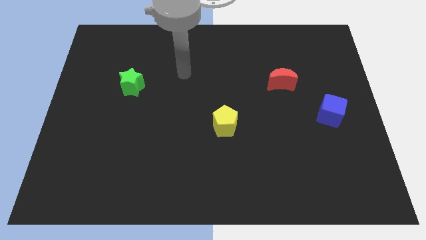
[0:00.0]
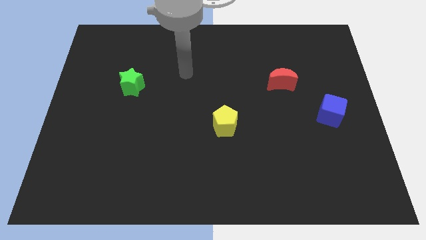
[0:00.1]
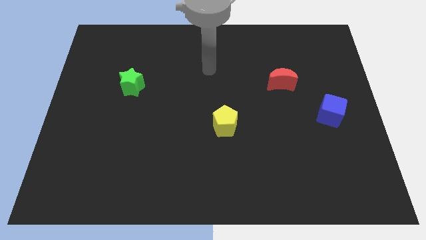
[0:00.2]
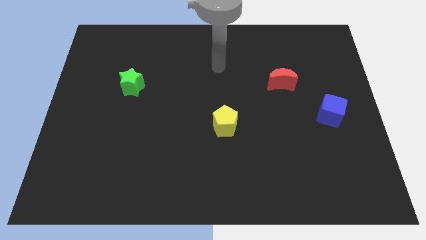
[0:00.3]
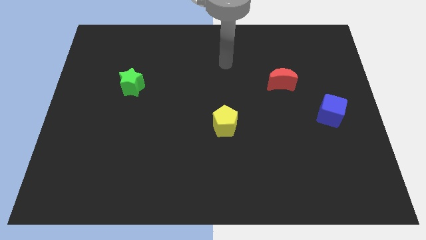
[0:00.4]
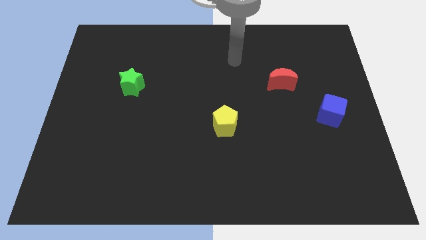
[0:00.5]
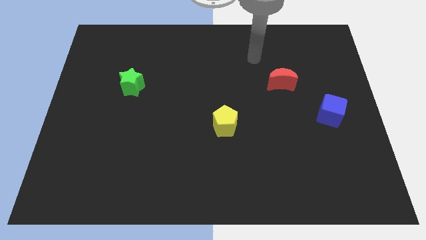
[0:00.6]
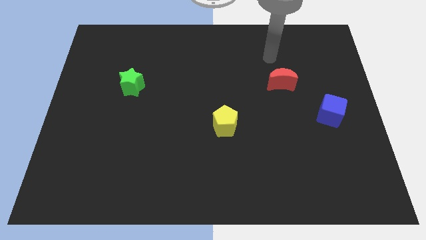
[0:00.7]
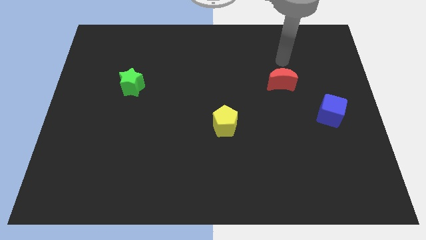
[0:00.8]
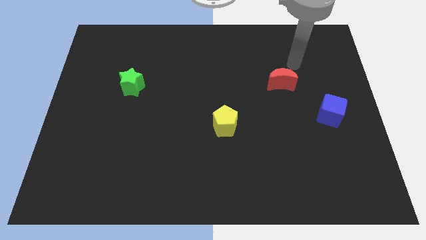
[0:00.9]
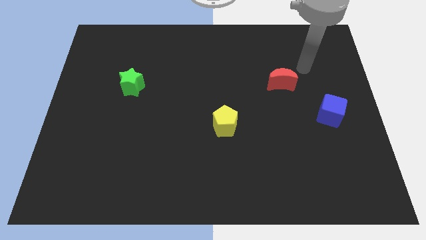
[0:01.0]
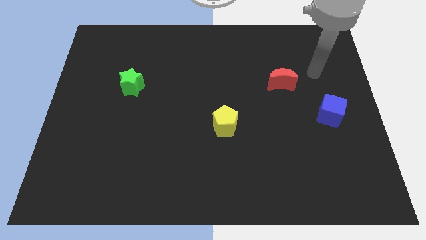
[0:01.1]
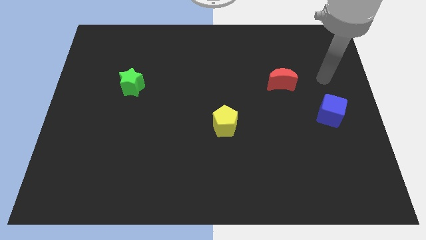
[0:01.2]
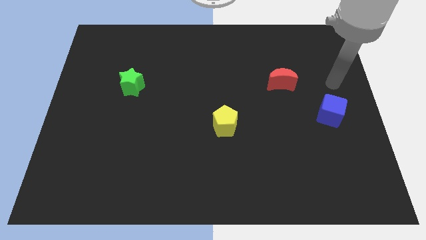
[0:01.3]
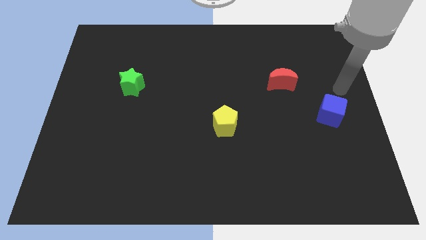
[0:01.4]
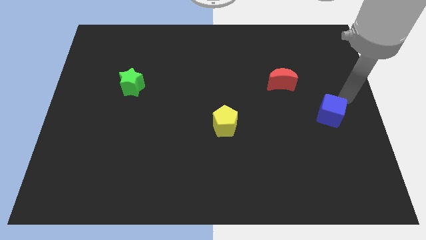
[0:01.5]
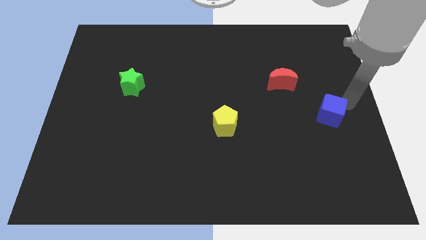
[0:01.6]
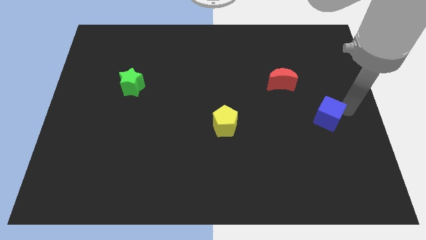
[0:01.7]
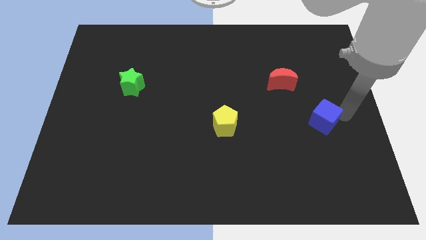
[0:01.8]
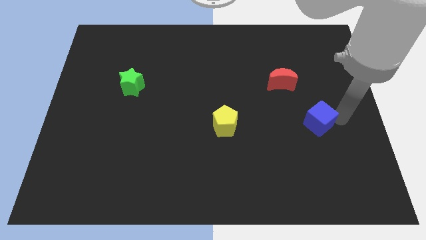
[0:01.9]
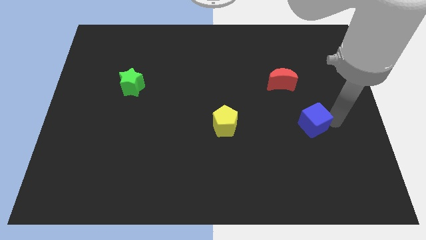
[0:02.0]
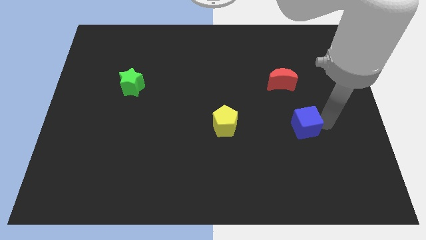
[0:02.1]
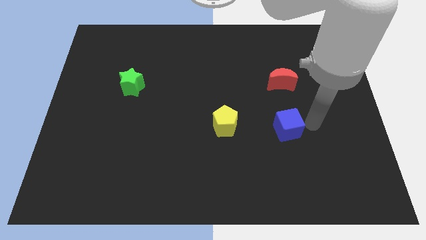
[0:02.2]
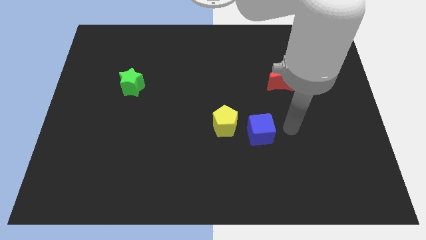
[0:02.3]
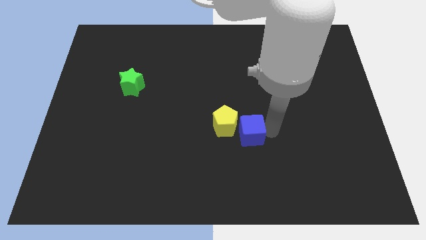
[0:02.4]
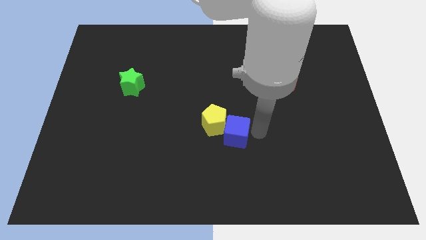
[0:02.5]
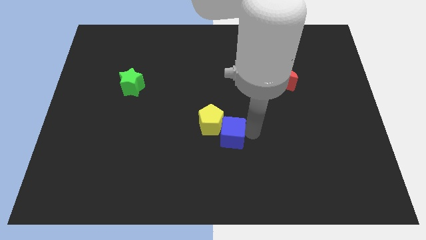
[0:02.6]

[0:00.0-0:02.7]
move the cube next to the yellow block

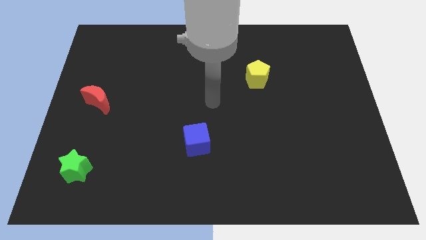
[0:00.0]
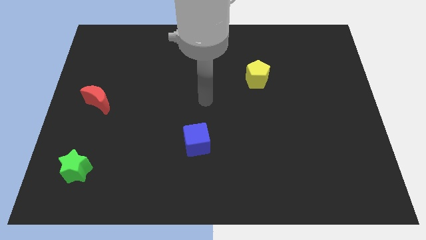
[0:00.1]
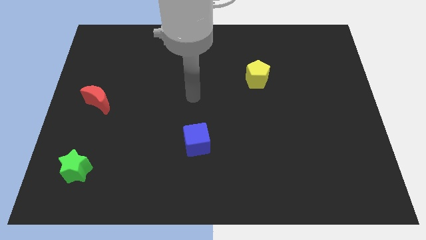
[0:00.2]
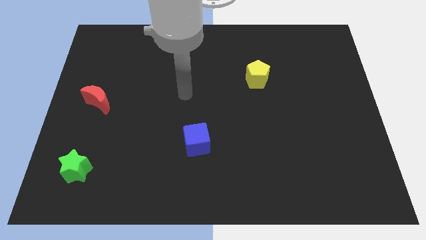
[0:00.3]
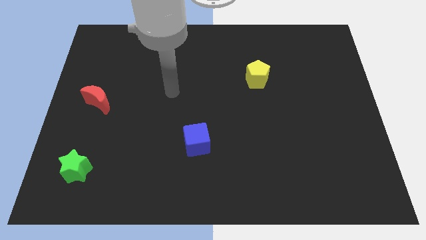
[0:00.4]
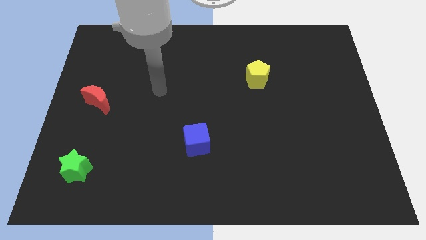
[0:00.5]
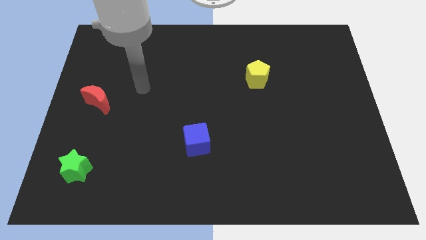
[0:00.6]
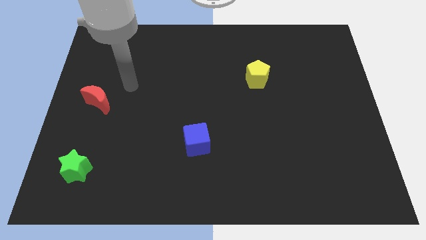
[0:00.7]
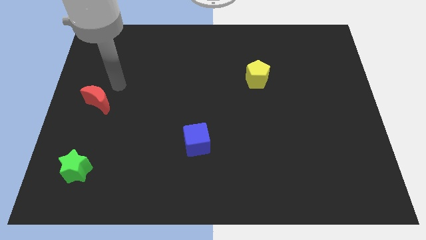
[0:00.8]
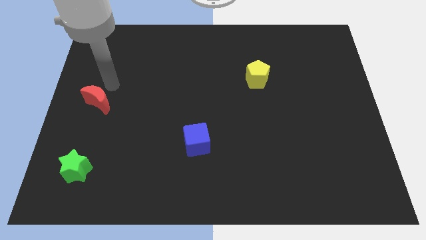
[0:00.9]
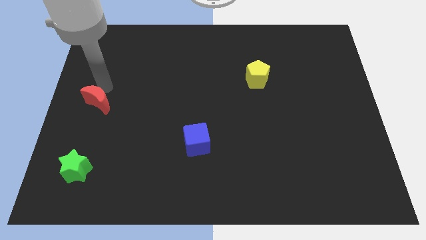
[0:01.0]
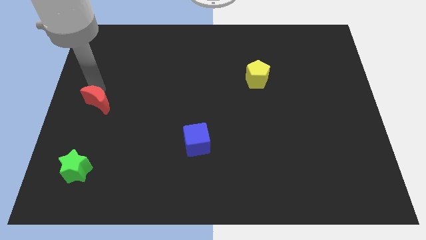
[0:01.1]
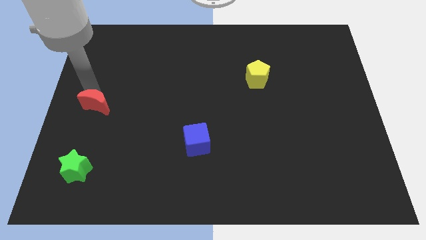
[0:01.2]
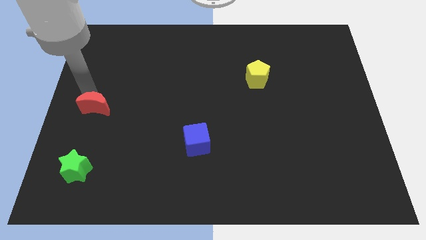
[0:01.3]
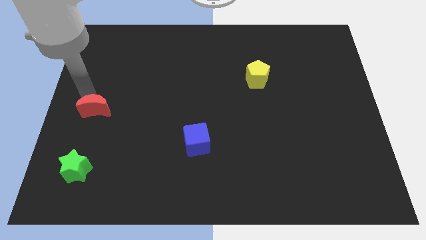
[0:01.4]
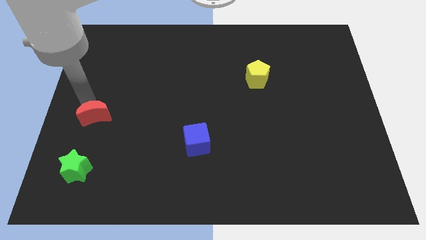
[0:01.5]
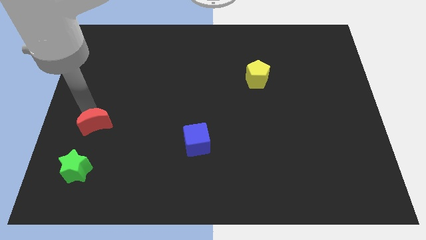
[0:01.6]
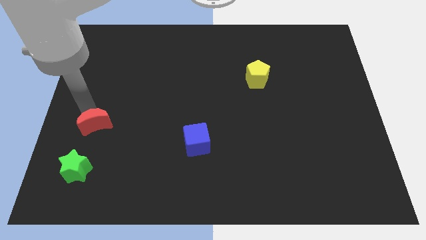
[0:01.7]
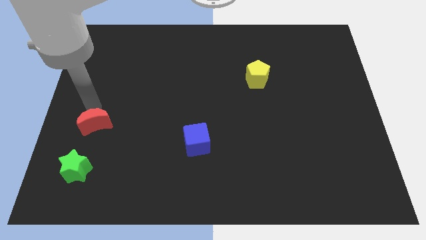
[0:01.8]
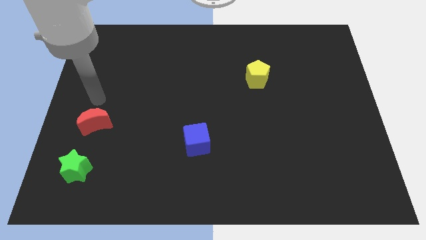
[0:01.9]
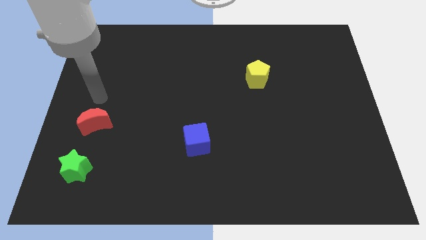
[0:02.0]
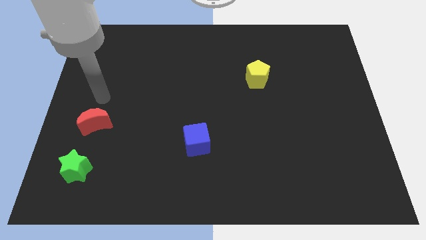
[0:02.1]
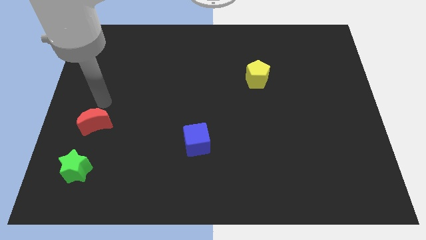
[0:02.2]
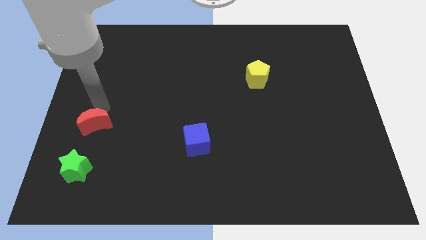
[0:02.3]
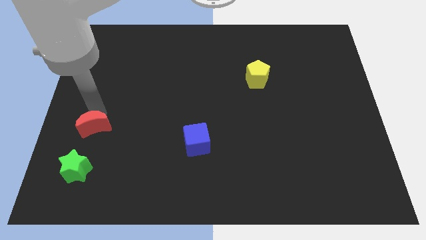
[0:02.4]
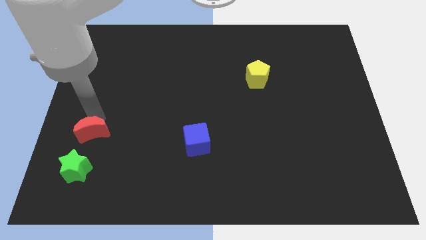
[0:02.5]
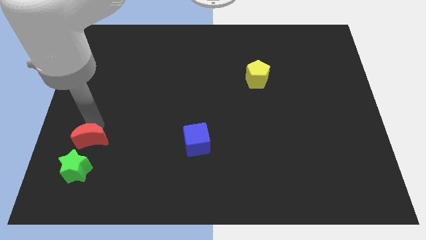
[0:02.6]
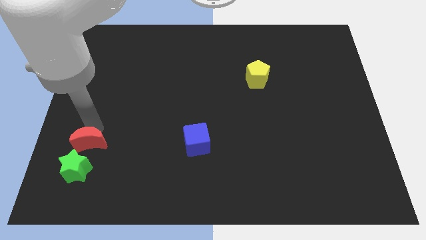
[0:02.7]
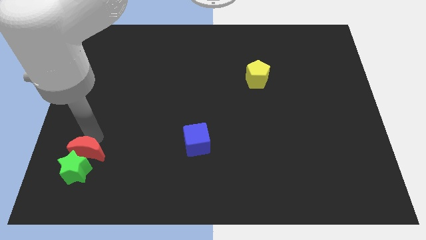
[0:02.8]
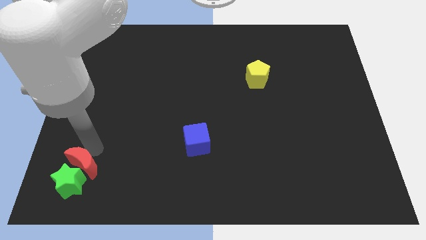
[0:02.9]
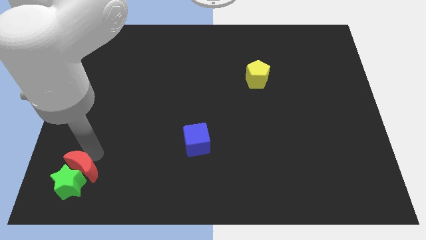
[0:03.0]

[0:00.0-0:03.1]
slide the red moon close to the green block

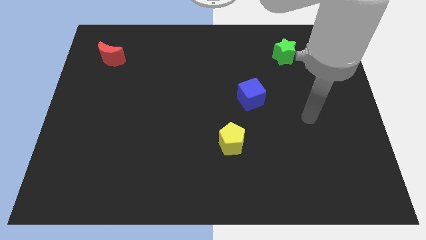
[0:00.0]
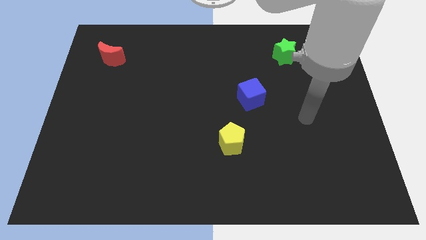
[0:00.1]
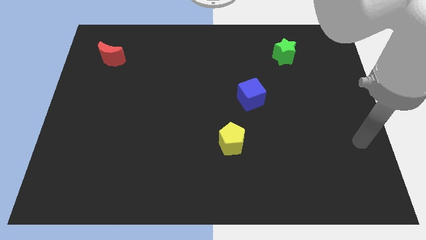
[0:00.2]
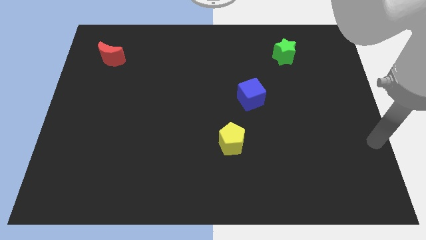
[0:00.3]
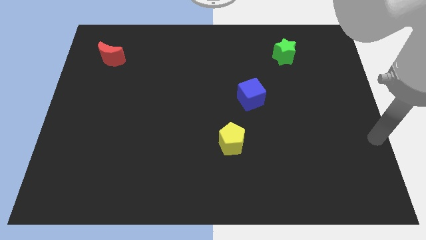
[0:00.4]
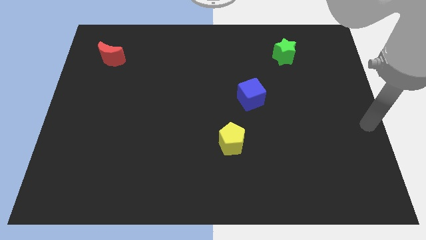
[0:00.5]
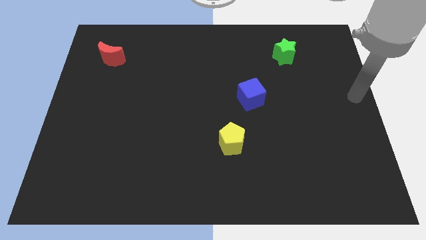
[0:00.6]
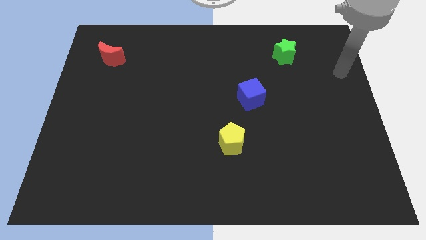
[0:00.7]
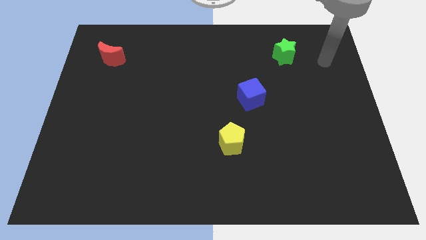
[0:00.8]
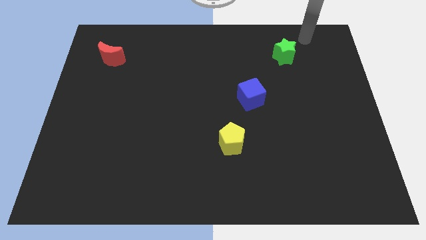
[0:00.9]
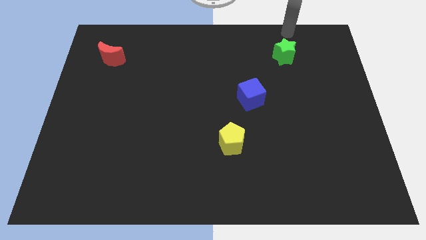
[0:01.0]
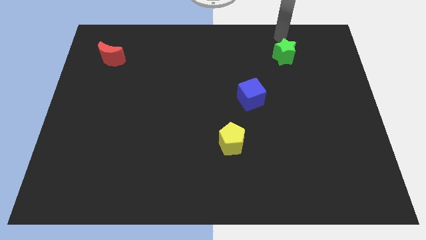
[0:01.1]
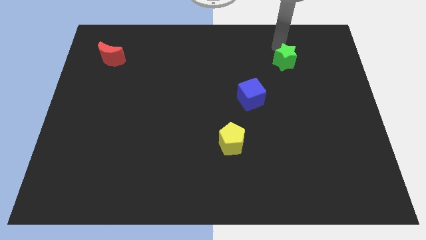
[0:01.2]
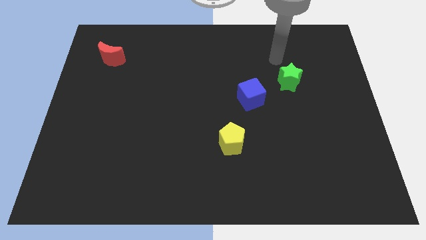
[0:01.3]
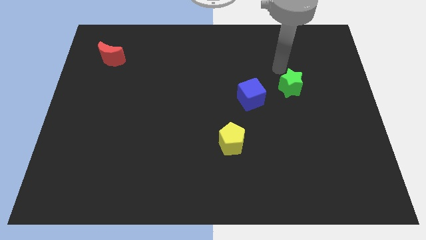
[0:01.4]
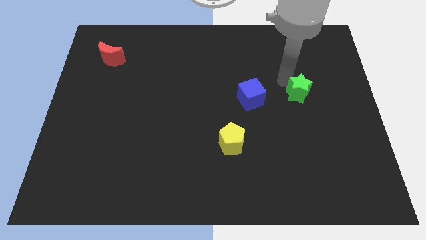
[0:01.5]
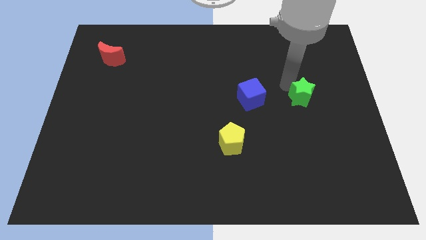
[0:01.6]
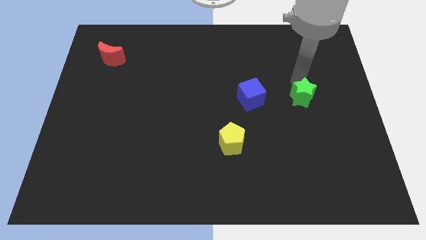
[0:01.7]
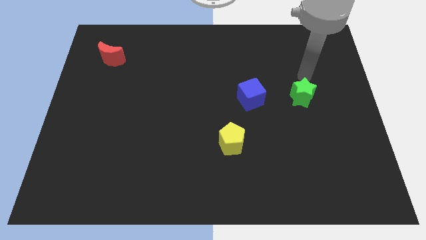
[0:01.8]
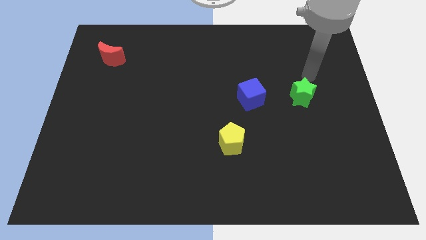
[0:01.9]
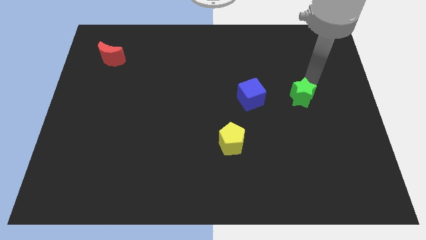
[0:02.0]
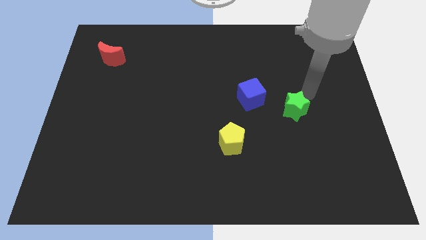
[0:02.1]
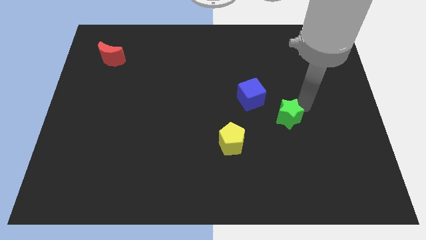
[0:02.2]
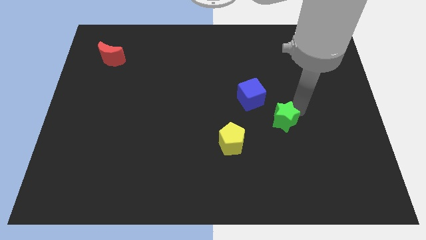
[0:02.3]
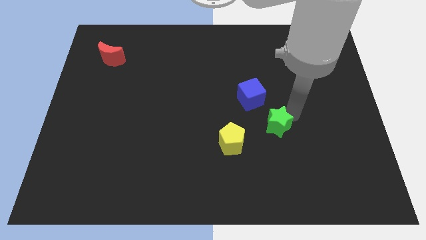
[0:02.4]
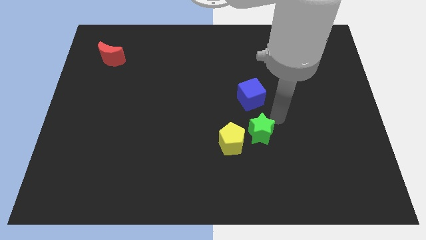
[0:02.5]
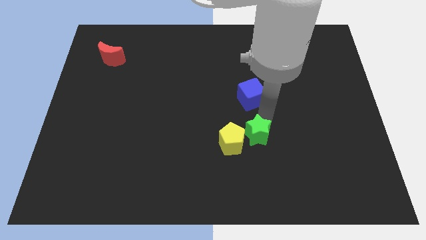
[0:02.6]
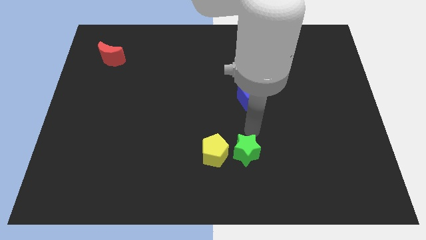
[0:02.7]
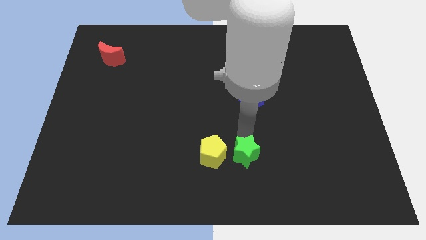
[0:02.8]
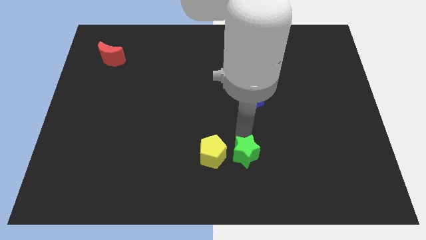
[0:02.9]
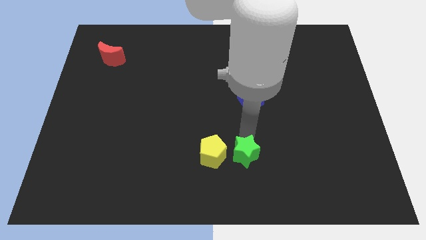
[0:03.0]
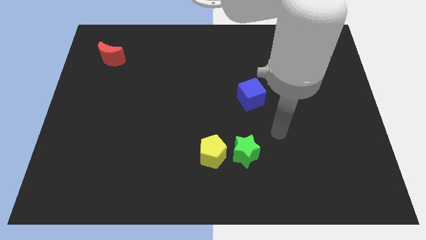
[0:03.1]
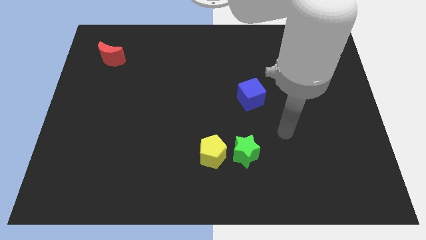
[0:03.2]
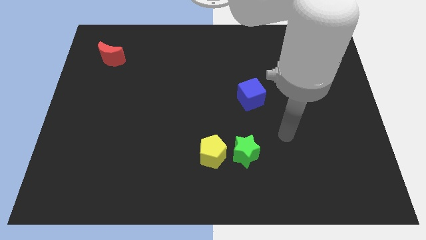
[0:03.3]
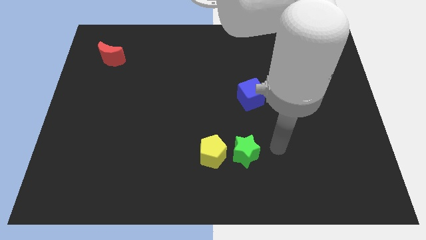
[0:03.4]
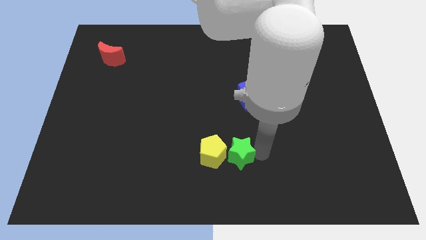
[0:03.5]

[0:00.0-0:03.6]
push the green block to the pentagon
